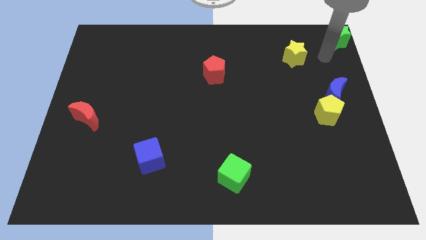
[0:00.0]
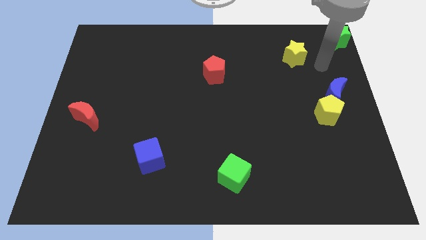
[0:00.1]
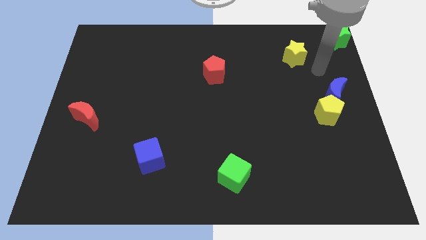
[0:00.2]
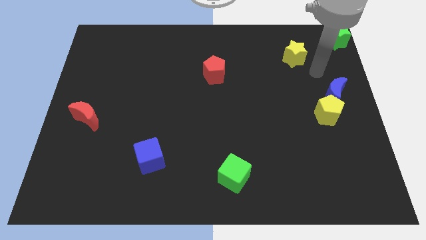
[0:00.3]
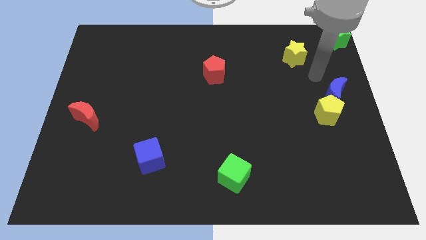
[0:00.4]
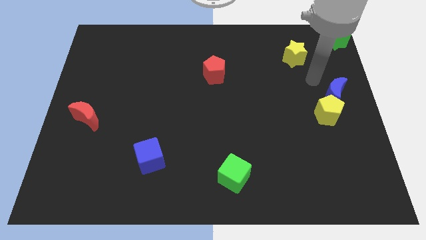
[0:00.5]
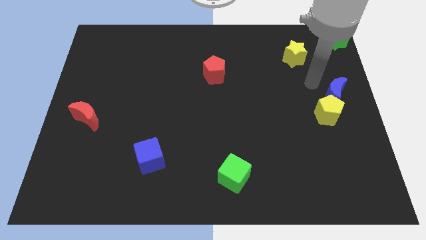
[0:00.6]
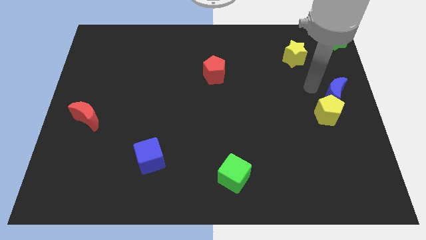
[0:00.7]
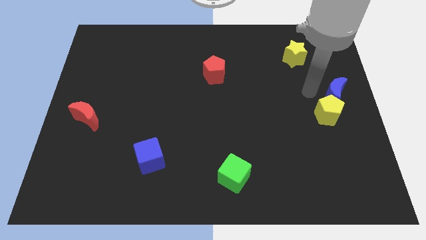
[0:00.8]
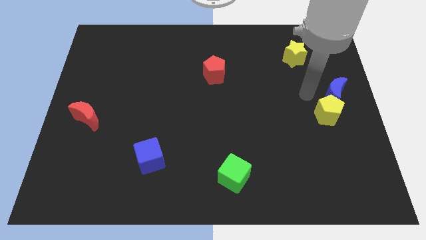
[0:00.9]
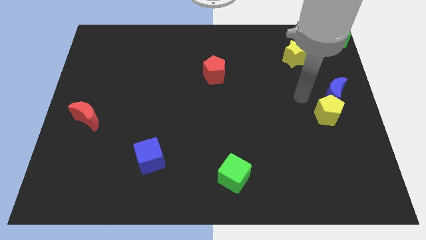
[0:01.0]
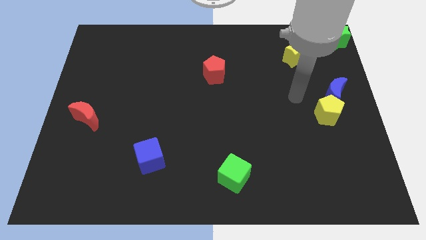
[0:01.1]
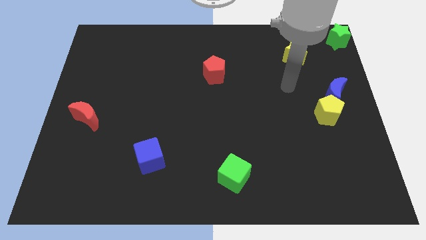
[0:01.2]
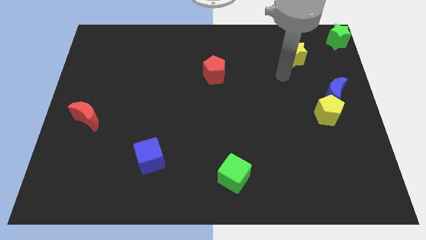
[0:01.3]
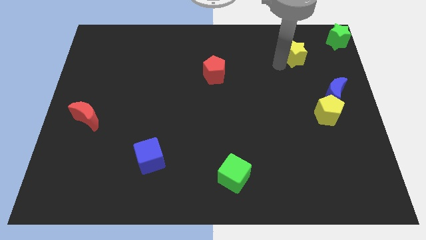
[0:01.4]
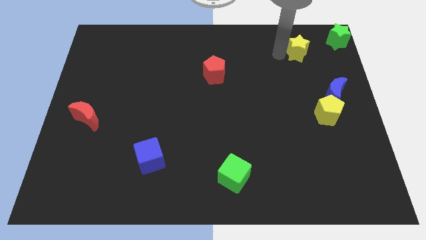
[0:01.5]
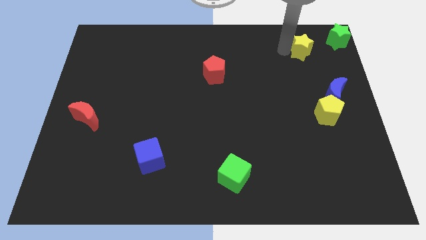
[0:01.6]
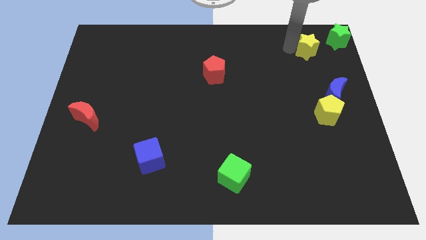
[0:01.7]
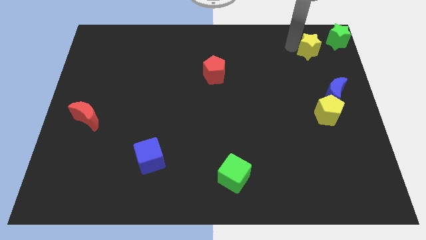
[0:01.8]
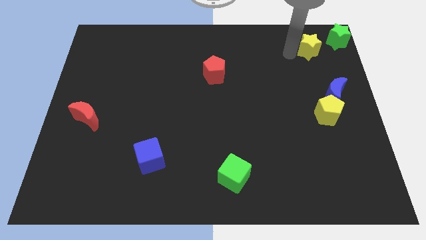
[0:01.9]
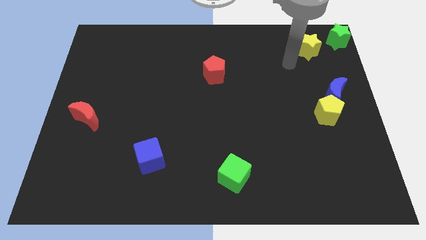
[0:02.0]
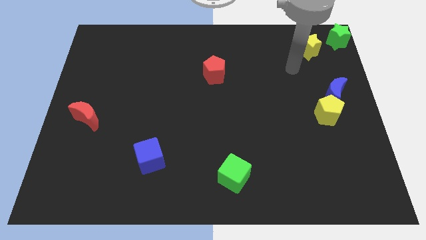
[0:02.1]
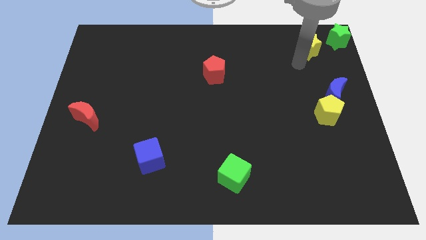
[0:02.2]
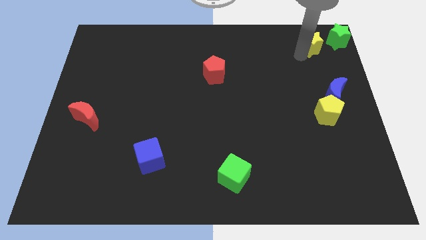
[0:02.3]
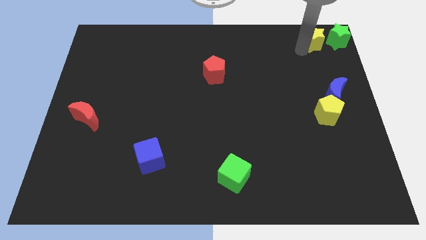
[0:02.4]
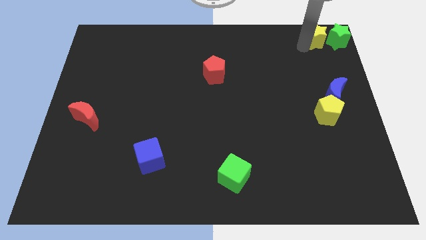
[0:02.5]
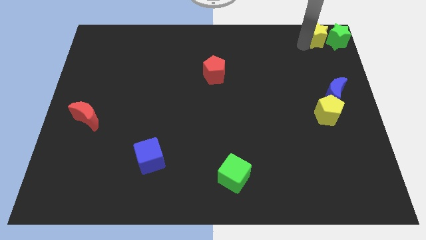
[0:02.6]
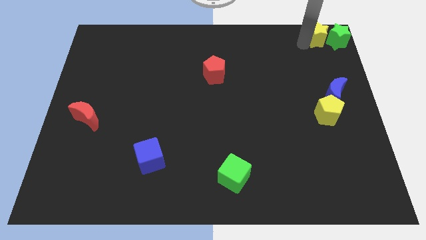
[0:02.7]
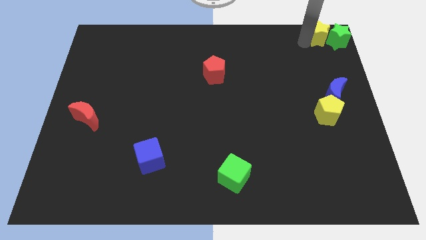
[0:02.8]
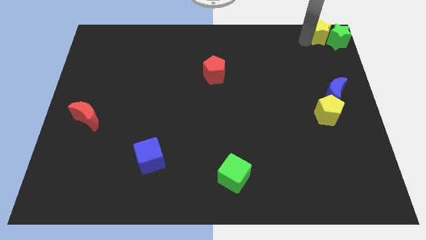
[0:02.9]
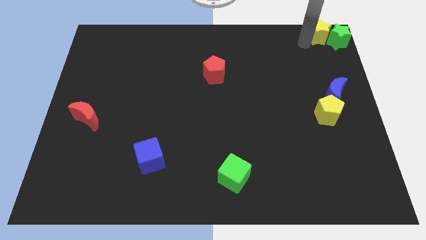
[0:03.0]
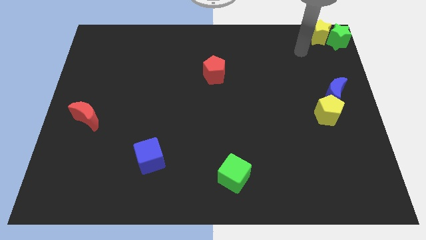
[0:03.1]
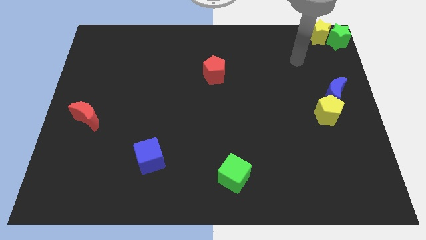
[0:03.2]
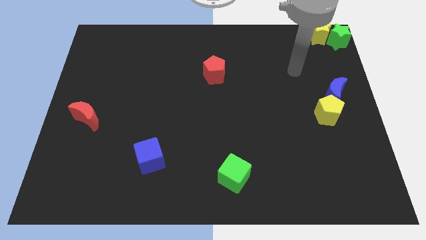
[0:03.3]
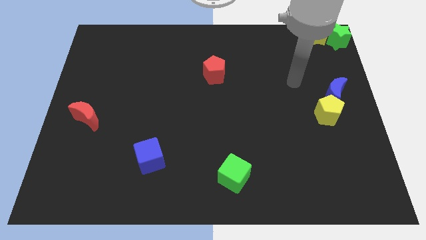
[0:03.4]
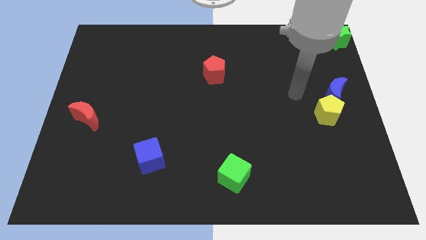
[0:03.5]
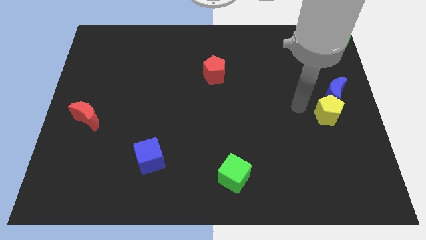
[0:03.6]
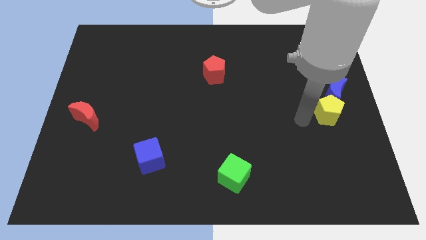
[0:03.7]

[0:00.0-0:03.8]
move the yellow star to the left of the green star

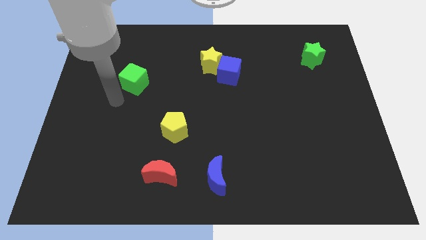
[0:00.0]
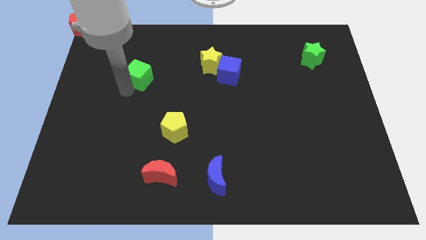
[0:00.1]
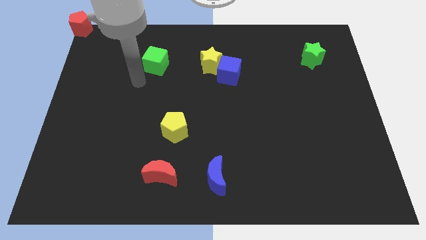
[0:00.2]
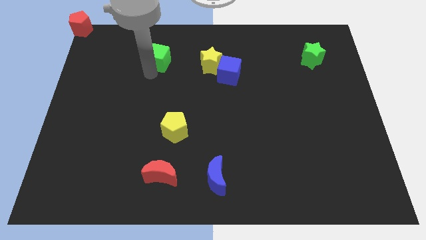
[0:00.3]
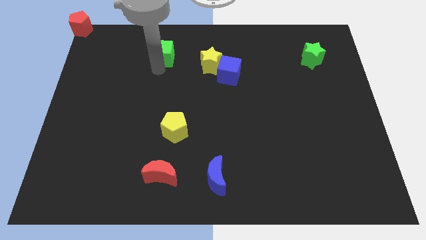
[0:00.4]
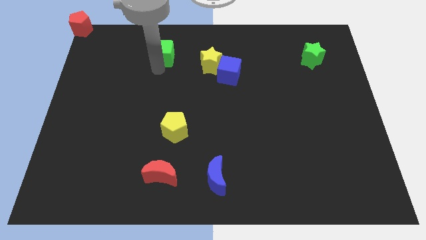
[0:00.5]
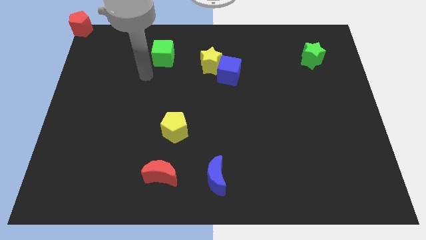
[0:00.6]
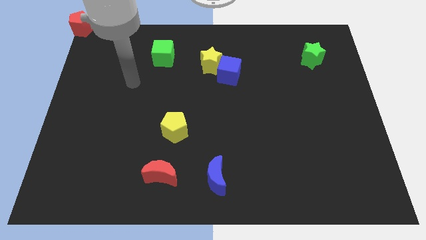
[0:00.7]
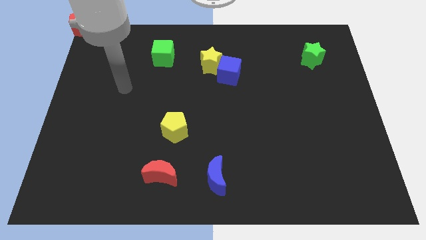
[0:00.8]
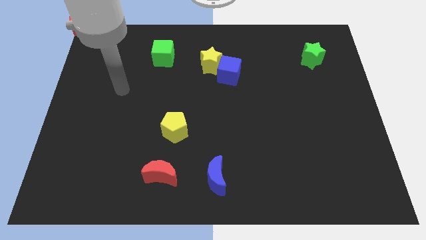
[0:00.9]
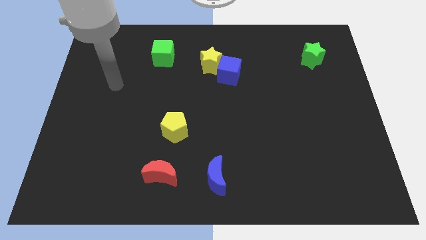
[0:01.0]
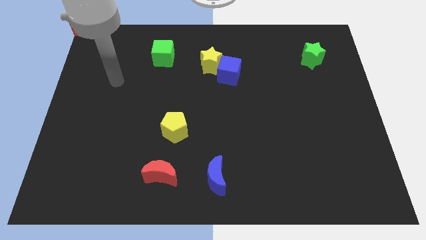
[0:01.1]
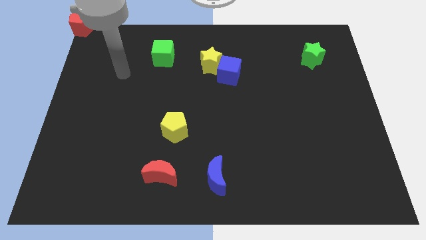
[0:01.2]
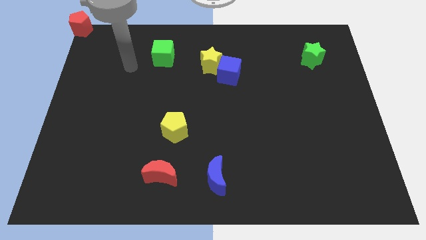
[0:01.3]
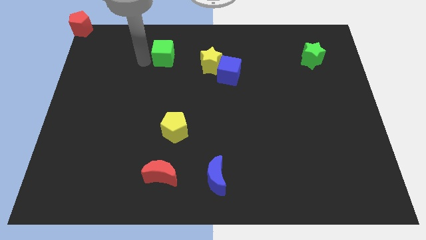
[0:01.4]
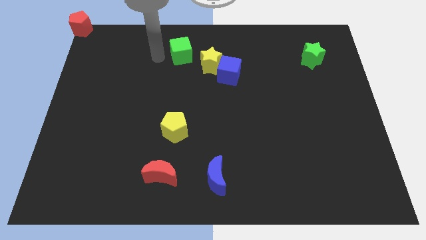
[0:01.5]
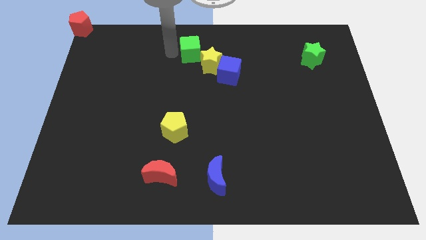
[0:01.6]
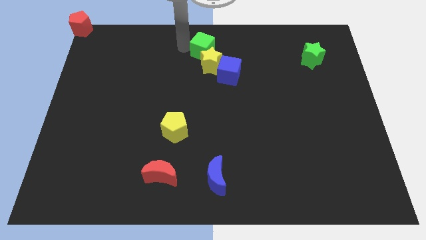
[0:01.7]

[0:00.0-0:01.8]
place the green cube slightly upwards

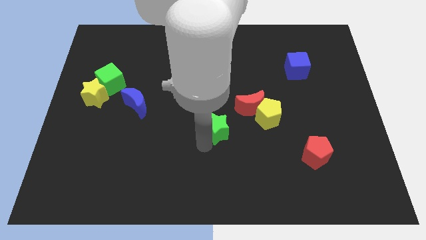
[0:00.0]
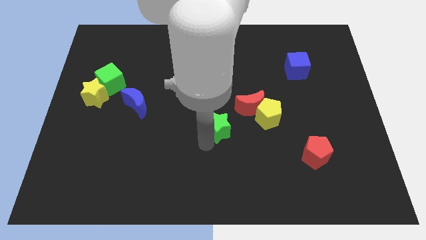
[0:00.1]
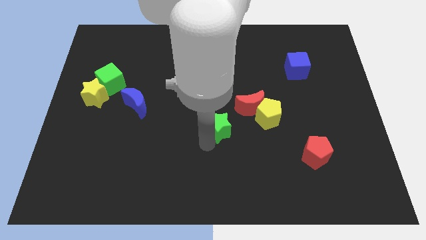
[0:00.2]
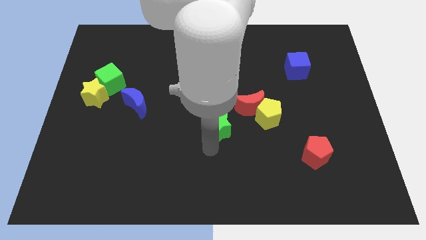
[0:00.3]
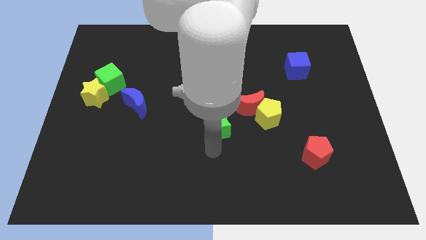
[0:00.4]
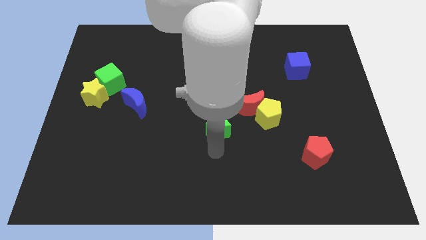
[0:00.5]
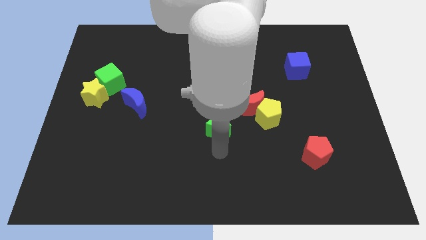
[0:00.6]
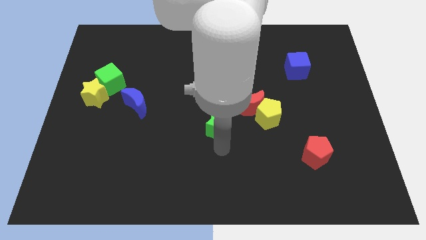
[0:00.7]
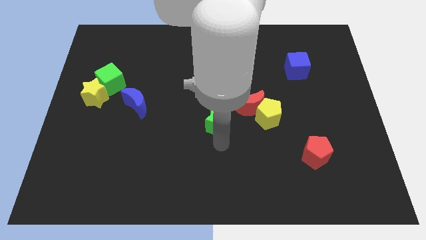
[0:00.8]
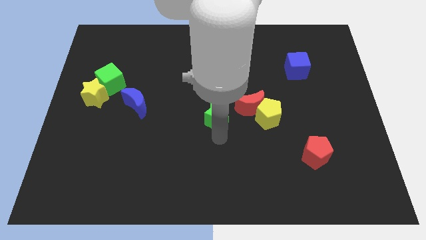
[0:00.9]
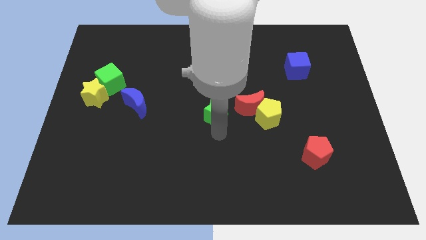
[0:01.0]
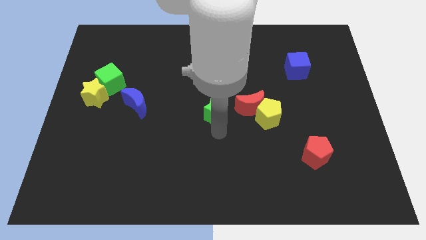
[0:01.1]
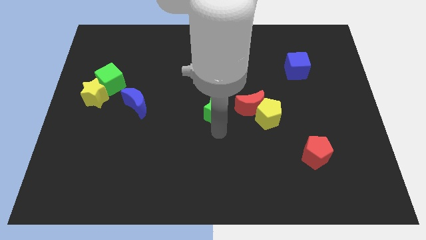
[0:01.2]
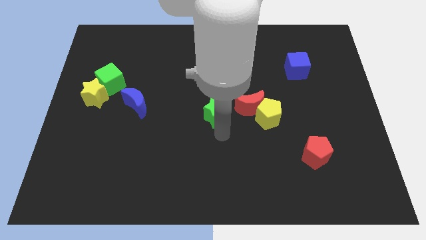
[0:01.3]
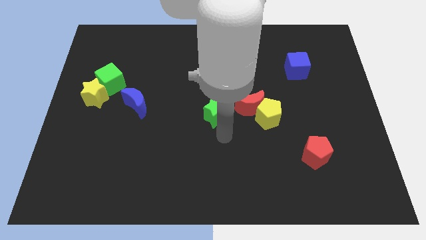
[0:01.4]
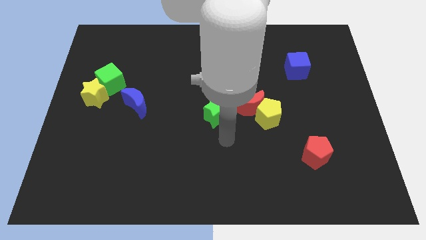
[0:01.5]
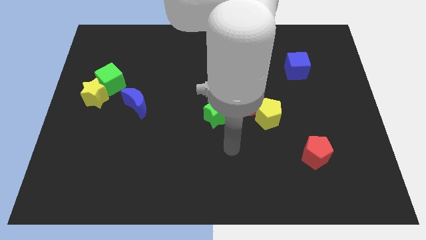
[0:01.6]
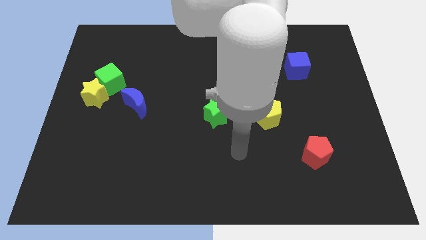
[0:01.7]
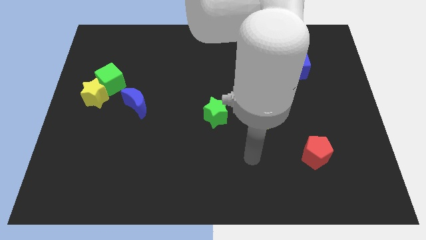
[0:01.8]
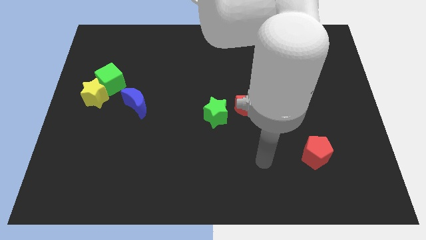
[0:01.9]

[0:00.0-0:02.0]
move the green star to left of red crescent

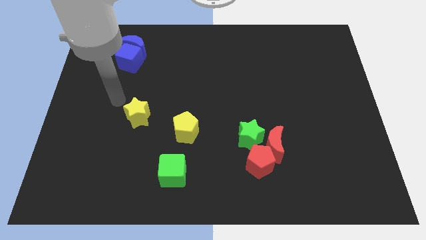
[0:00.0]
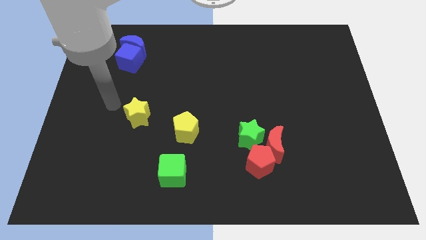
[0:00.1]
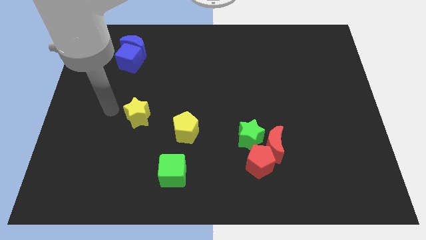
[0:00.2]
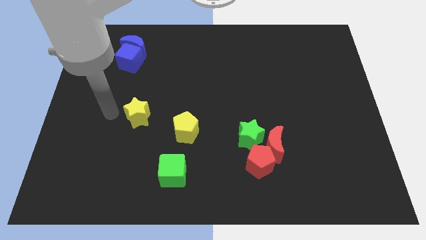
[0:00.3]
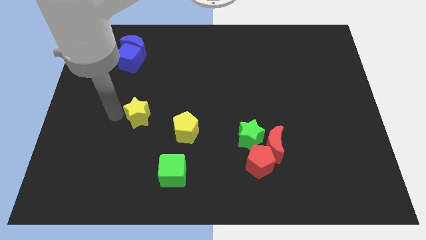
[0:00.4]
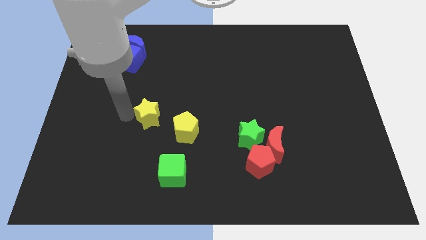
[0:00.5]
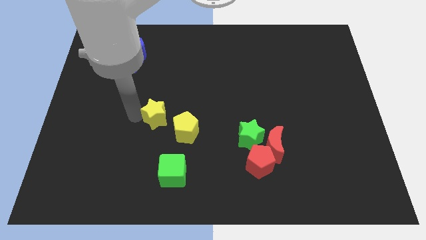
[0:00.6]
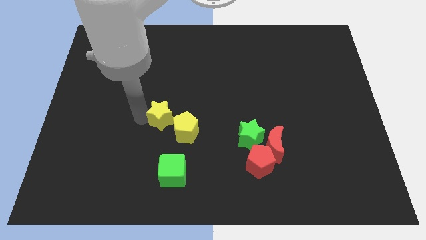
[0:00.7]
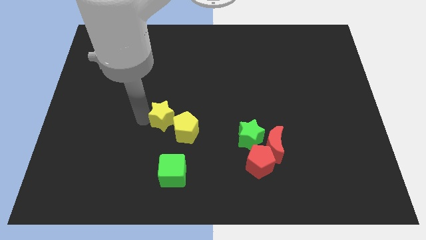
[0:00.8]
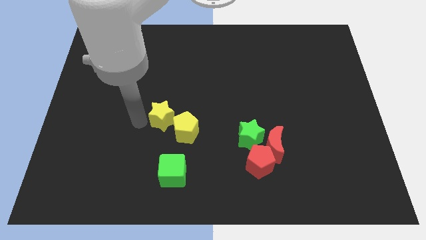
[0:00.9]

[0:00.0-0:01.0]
move the yellow star towards the yellow pentagon

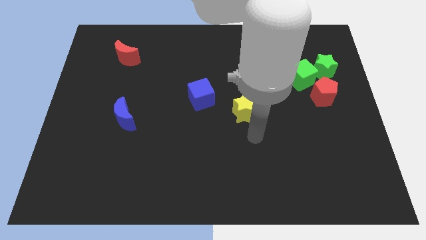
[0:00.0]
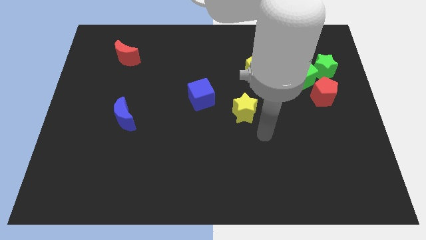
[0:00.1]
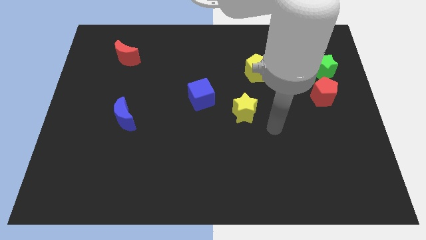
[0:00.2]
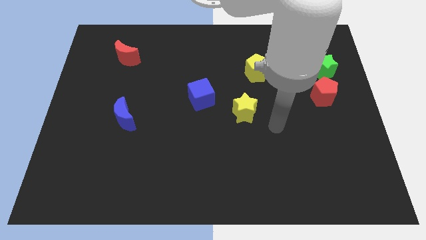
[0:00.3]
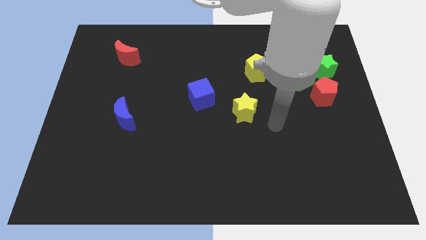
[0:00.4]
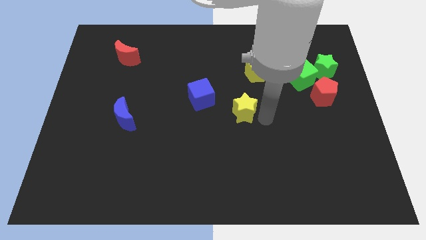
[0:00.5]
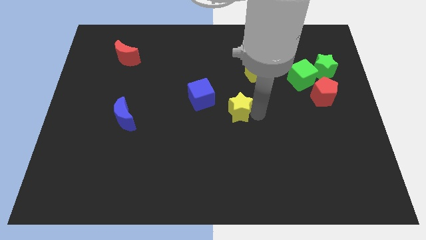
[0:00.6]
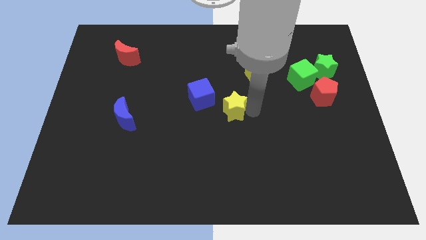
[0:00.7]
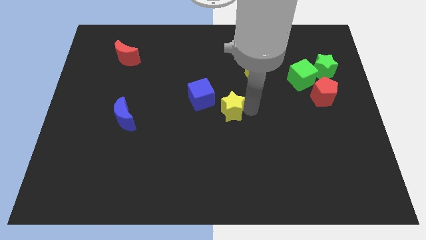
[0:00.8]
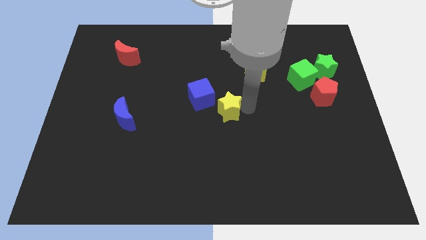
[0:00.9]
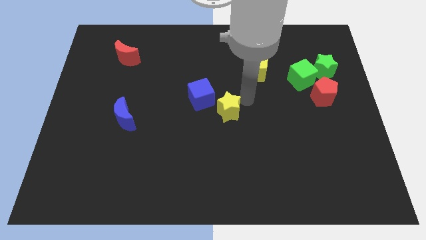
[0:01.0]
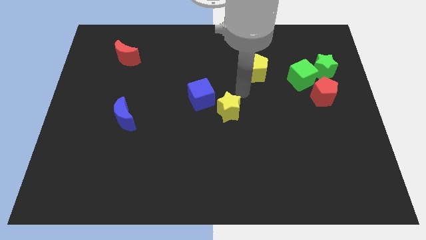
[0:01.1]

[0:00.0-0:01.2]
put the yellow star at the bottom right side of blue cube
